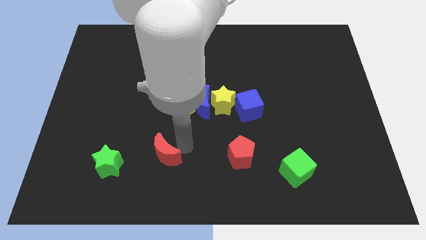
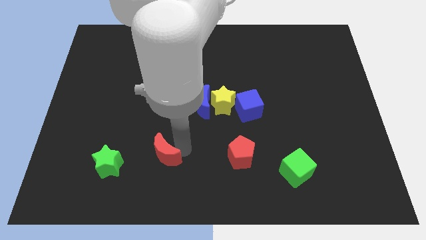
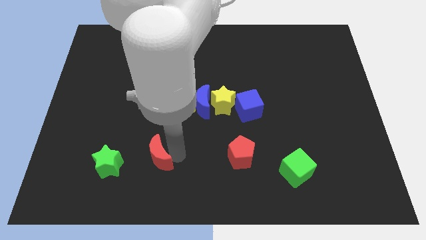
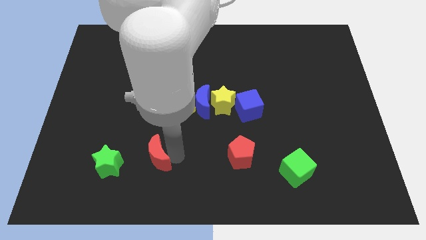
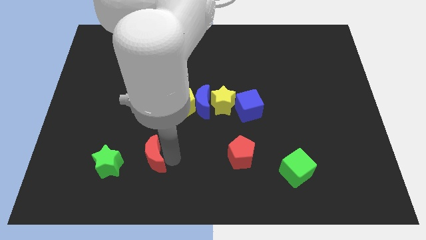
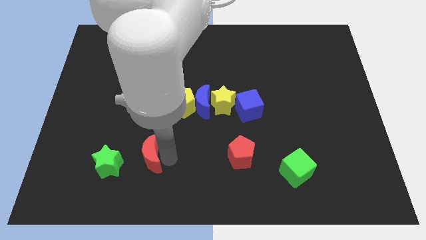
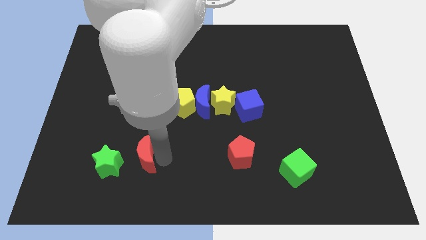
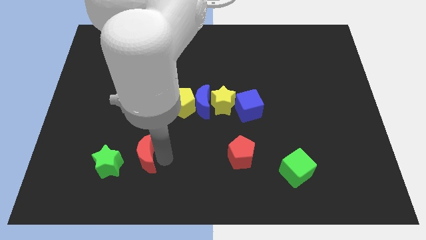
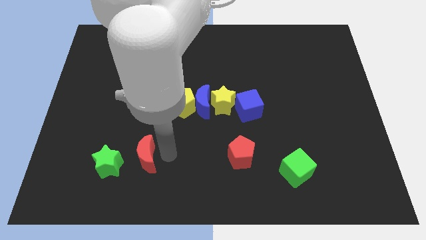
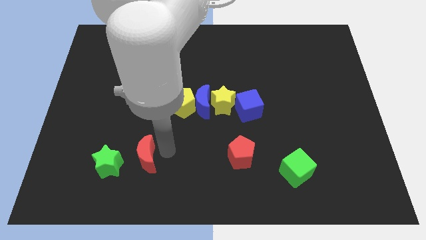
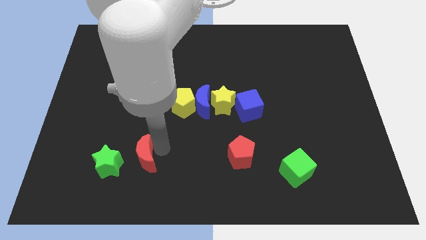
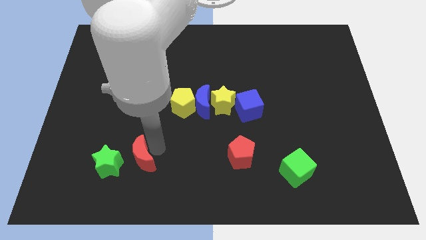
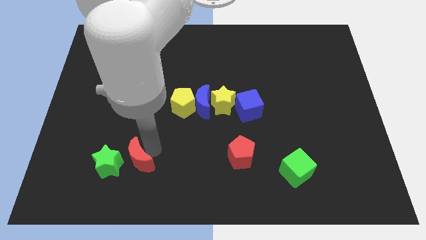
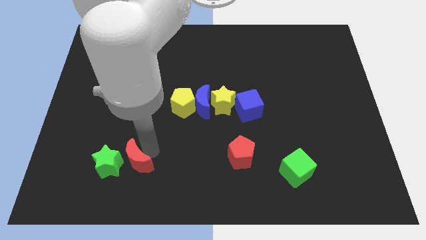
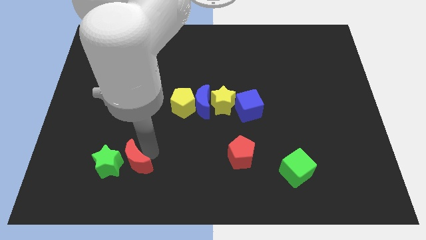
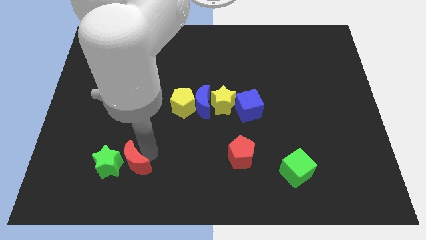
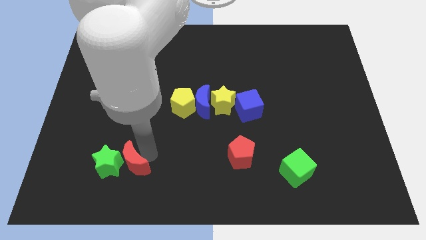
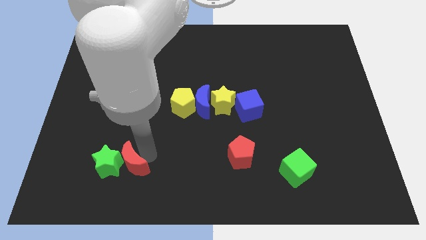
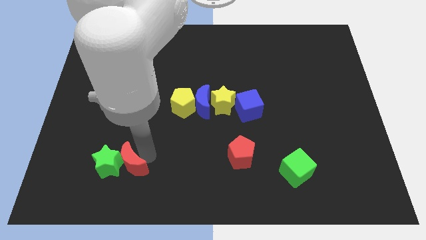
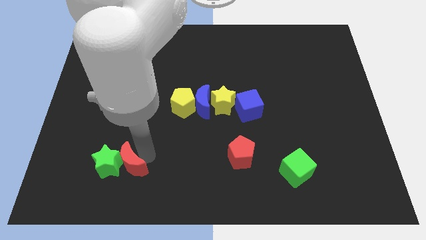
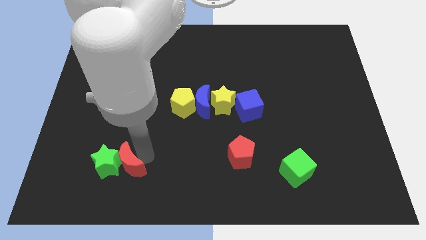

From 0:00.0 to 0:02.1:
put the red crescent and the green star together

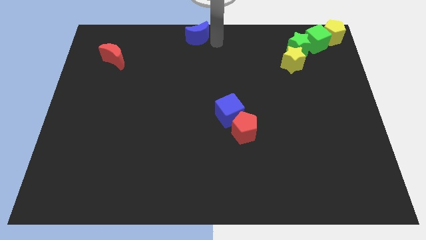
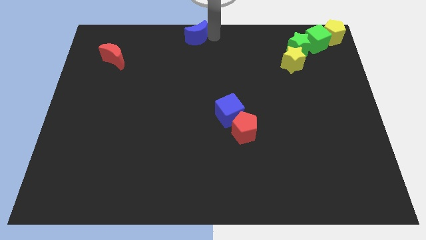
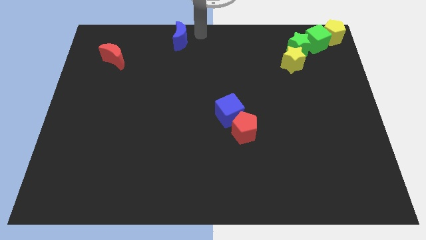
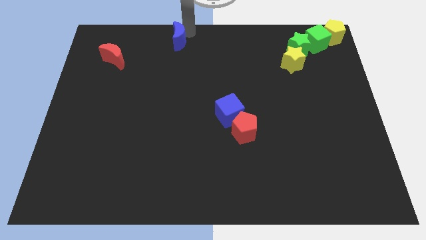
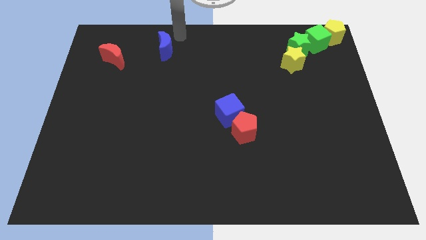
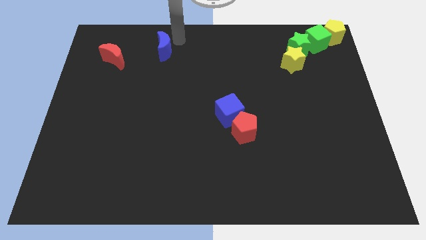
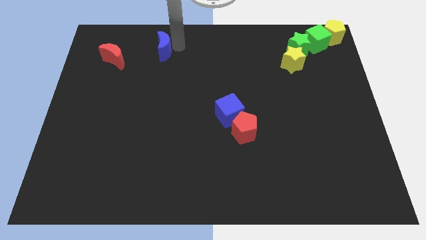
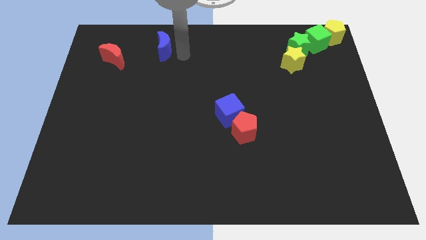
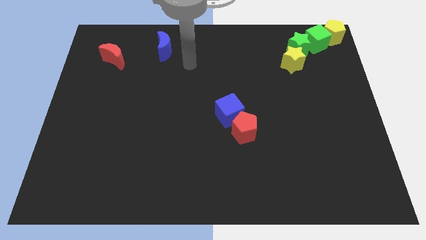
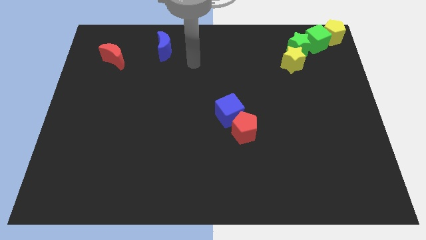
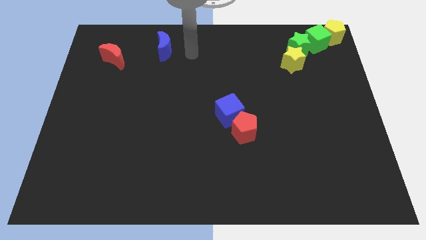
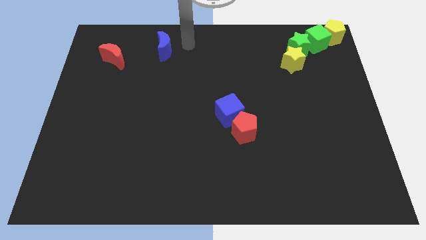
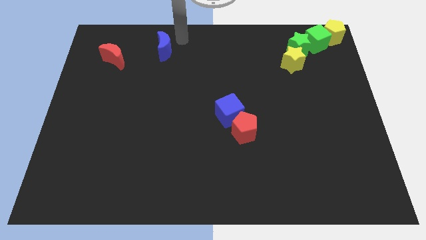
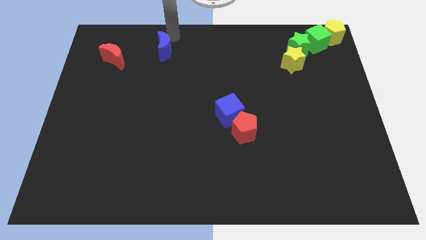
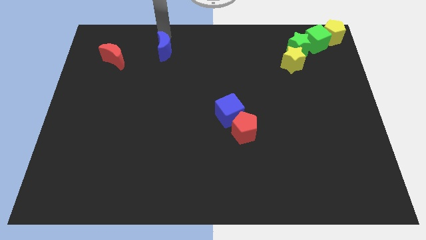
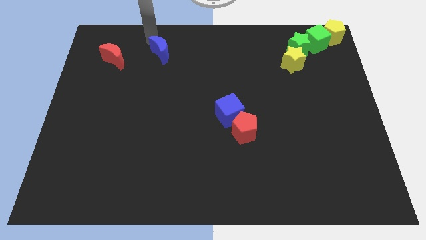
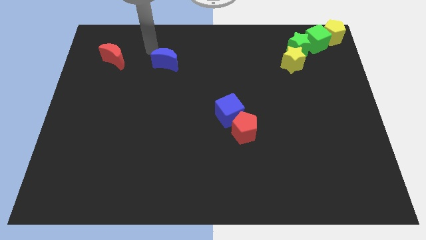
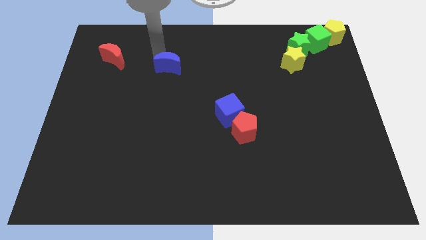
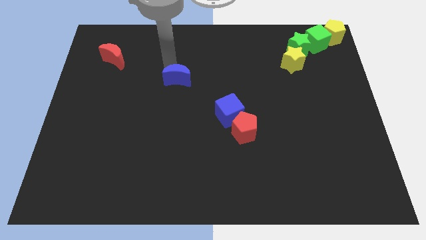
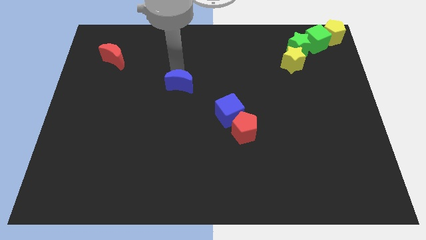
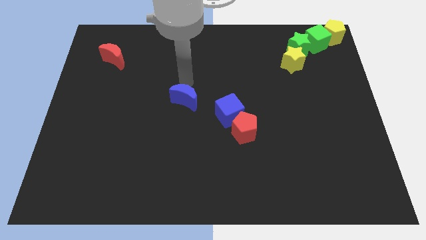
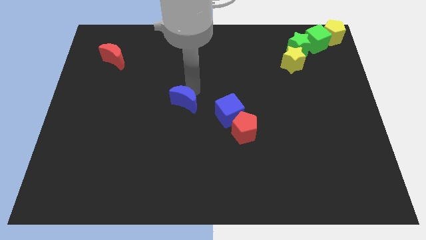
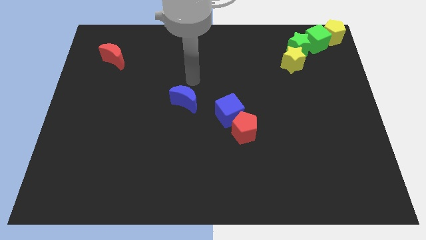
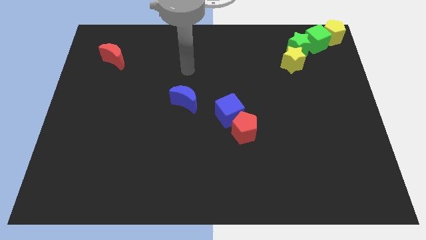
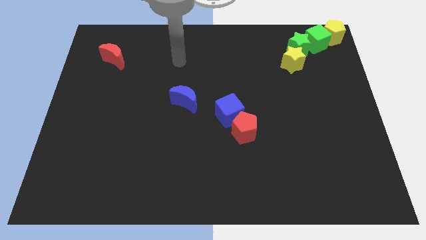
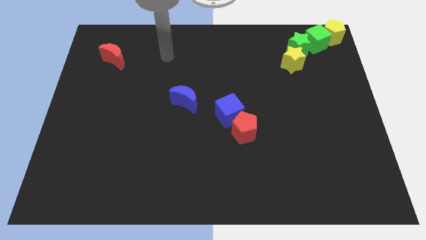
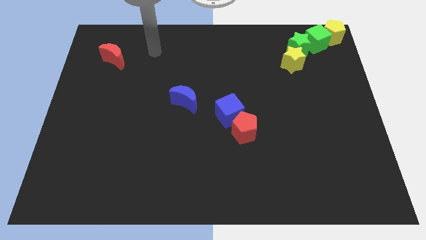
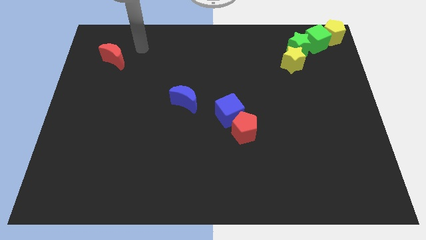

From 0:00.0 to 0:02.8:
move the blue moon towards the left side of the blue cube

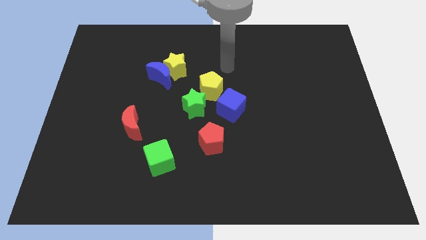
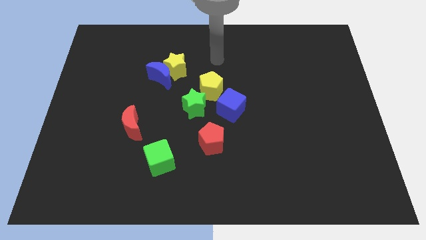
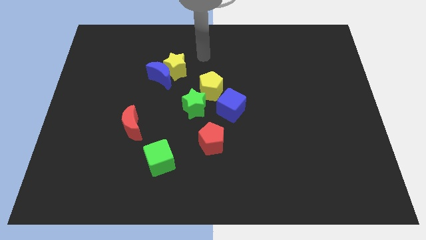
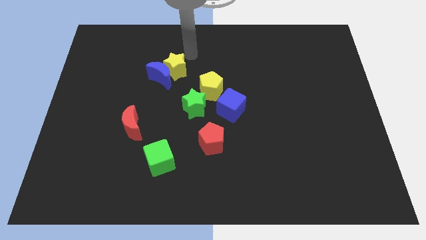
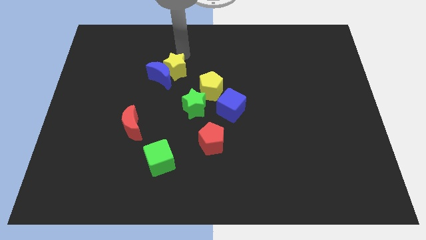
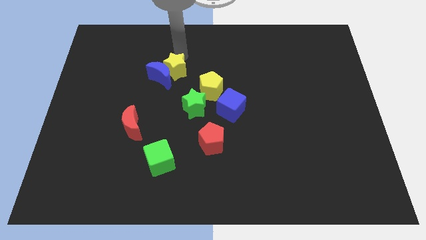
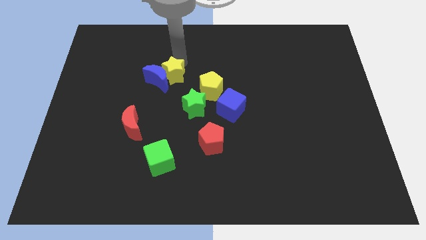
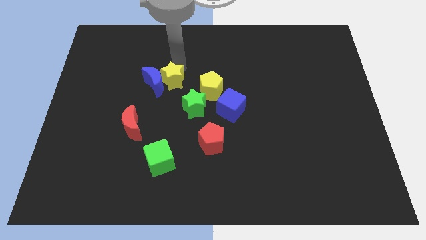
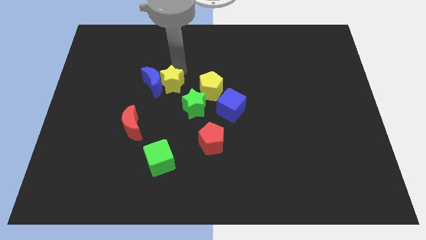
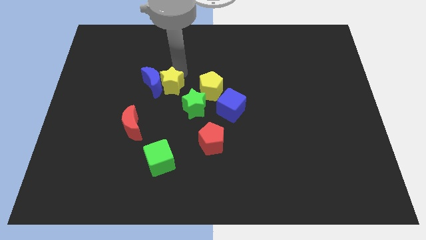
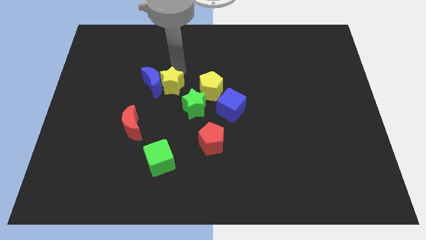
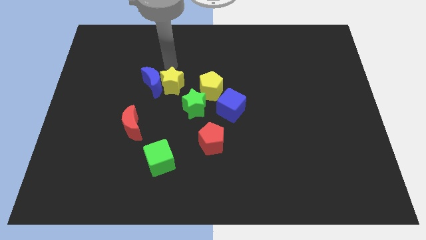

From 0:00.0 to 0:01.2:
move the yellow star to the right of the blue crescent

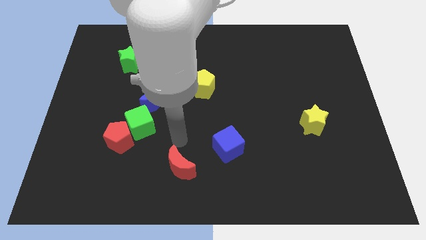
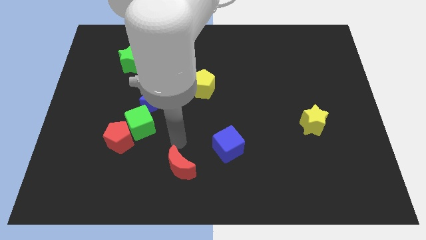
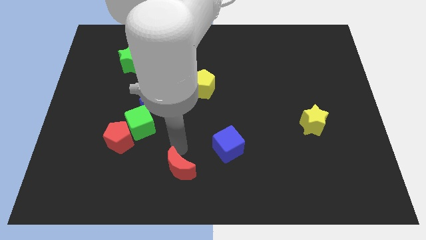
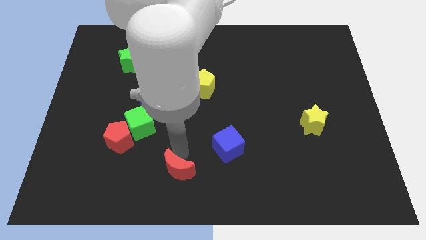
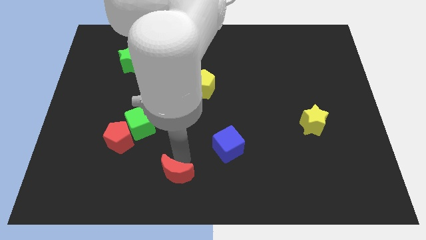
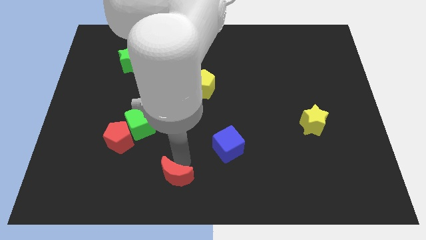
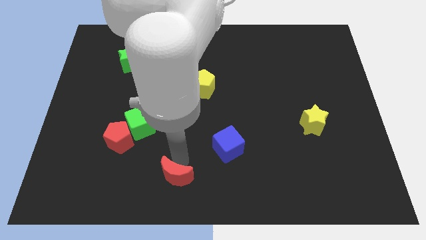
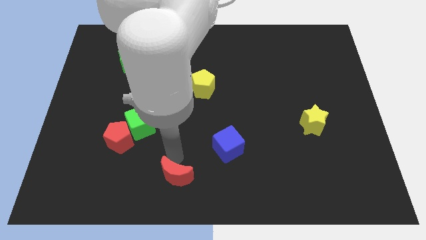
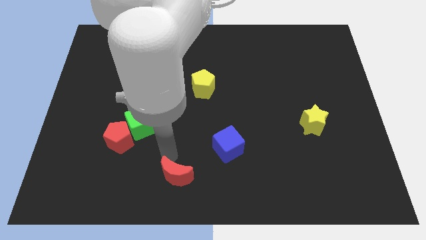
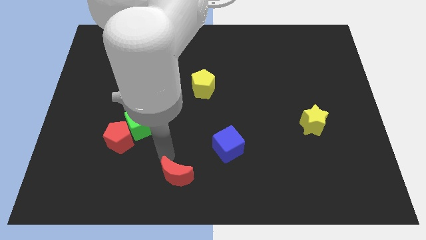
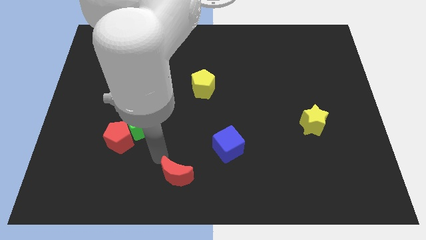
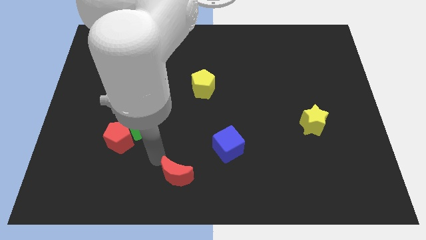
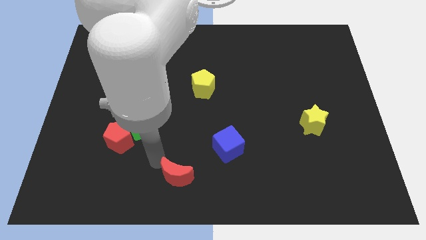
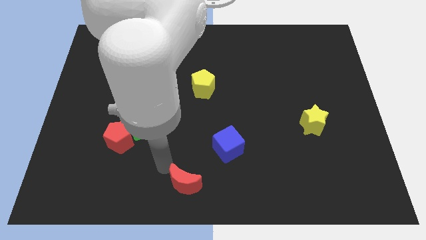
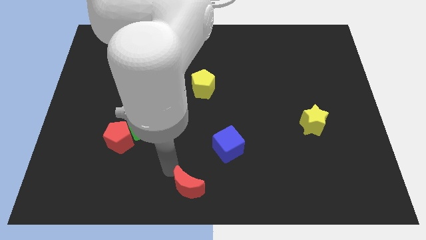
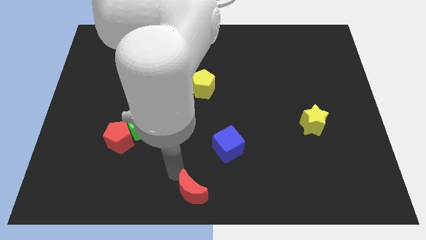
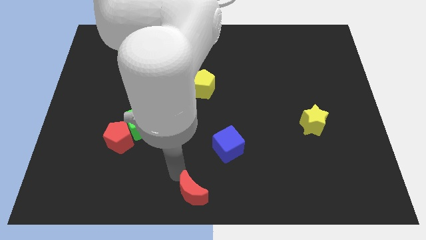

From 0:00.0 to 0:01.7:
move the red crescent towards the center bottom of the board

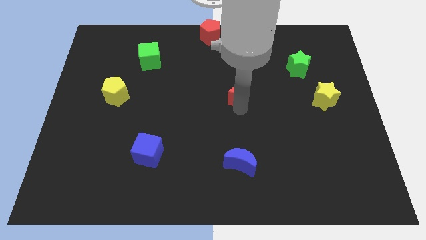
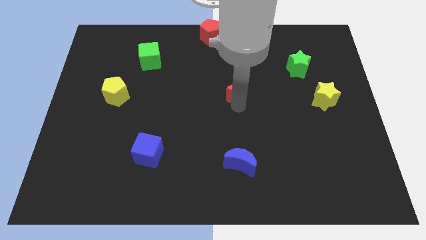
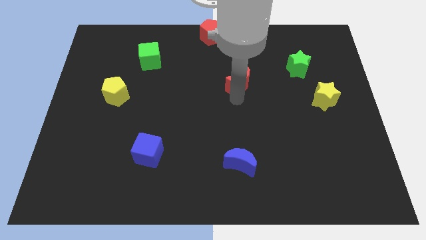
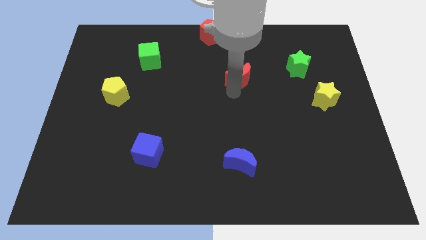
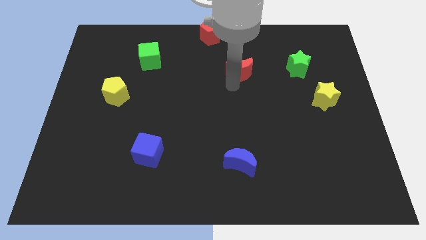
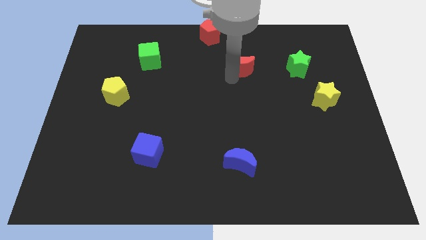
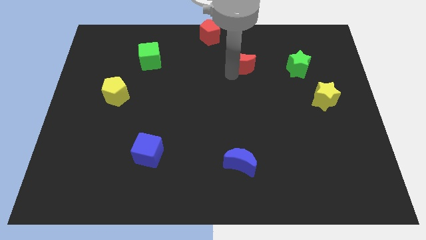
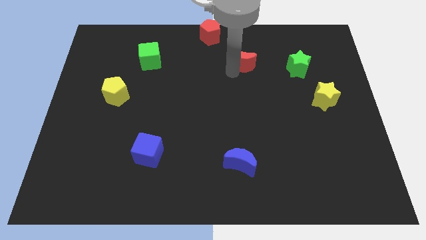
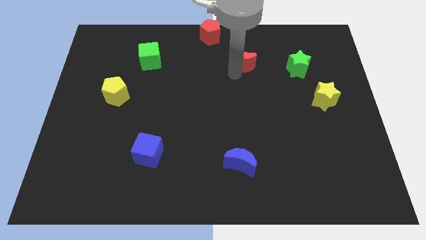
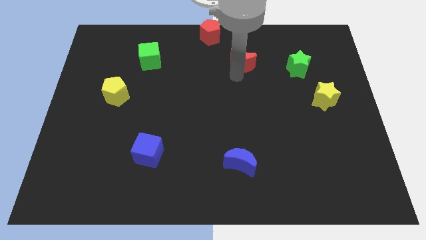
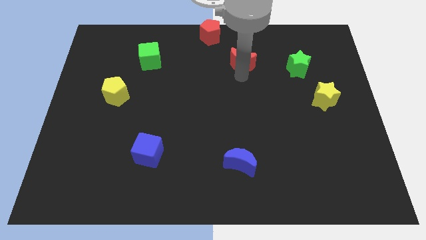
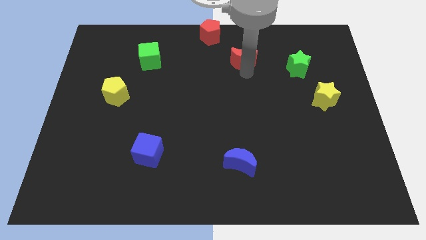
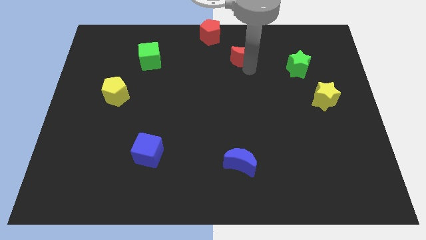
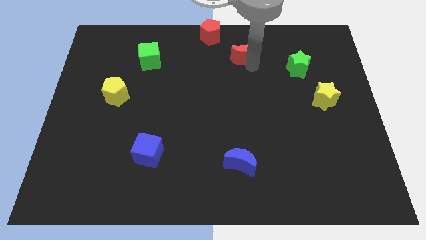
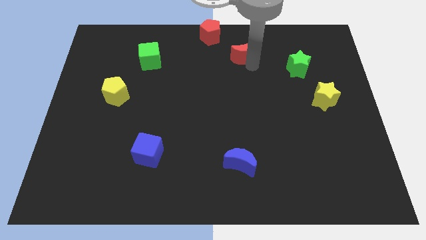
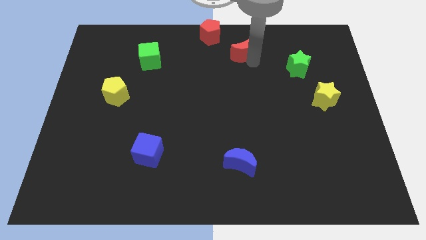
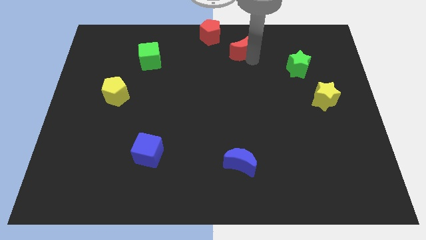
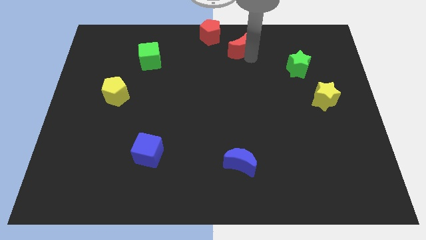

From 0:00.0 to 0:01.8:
slide the red crescent slightly towards up
